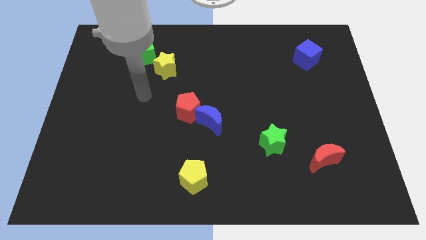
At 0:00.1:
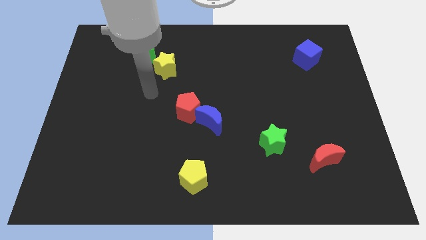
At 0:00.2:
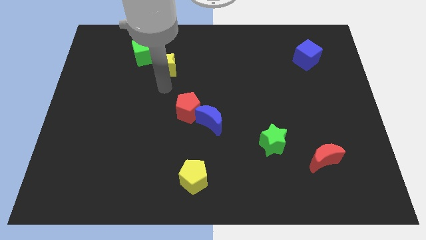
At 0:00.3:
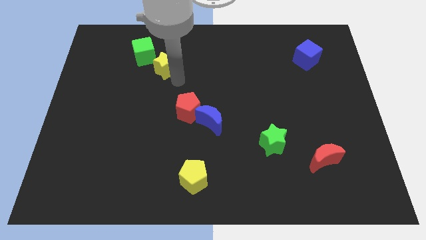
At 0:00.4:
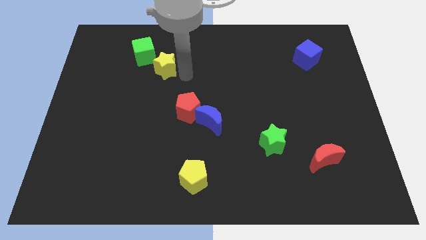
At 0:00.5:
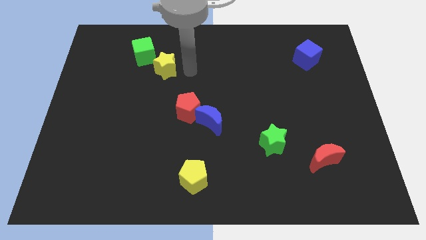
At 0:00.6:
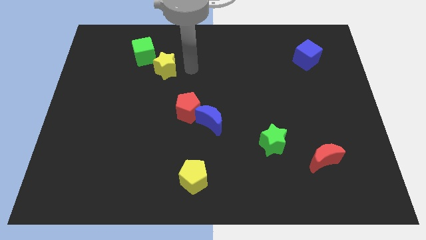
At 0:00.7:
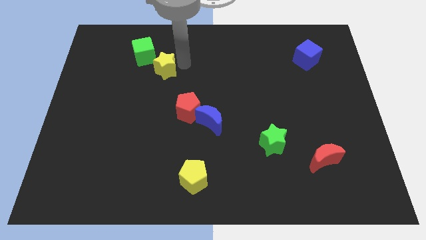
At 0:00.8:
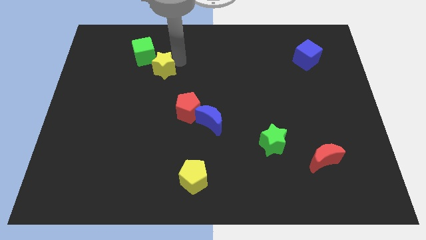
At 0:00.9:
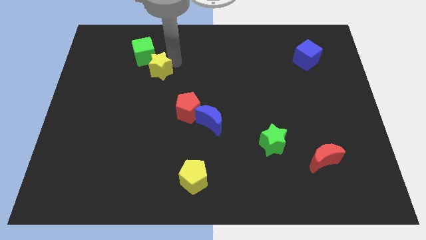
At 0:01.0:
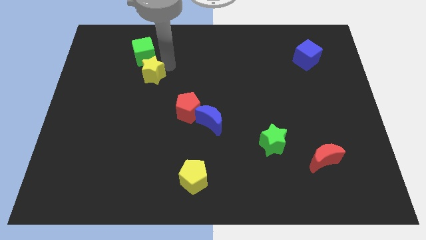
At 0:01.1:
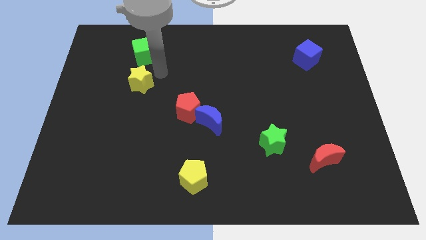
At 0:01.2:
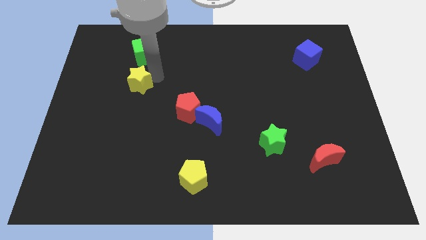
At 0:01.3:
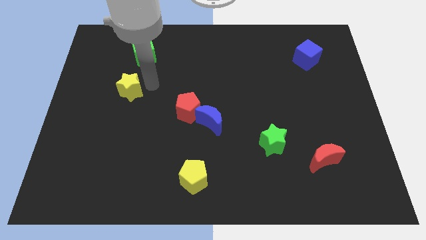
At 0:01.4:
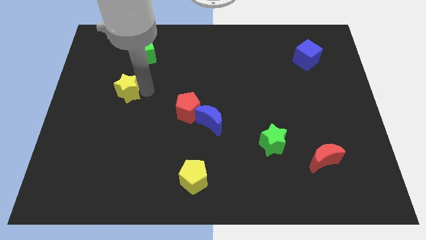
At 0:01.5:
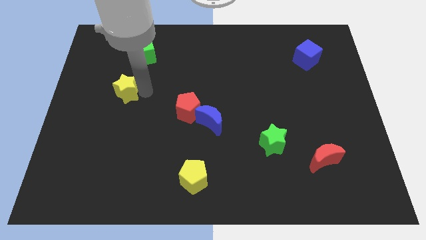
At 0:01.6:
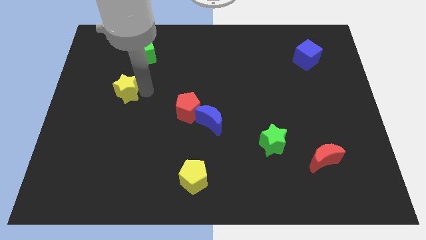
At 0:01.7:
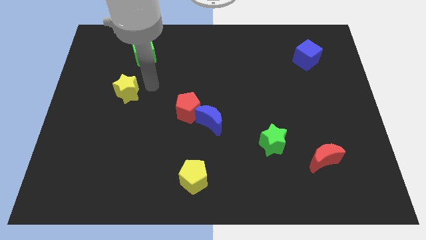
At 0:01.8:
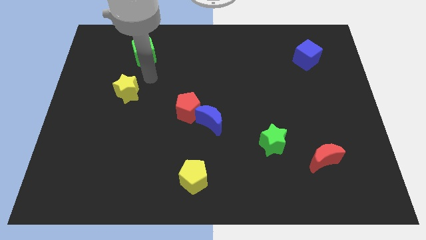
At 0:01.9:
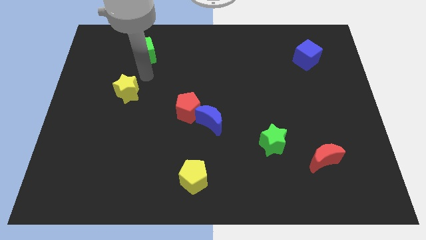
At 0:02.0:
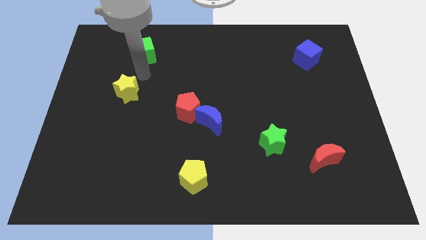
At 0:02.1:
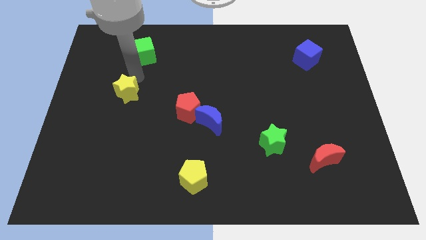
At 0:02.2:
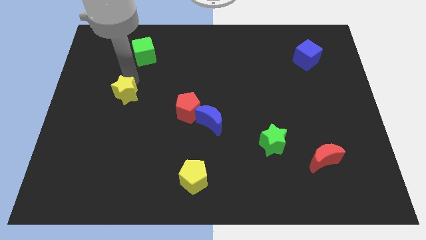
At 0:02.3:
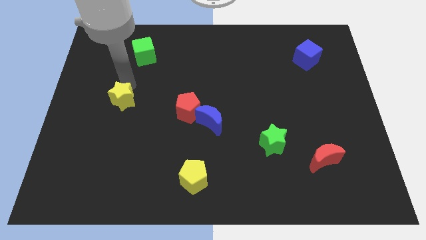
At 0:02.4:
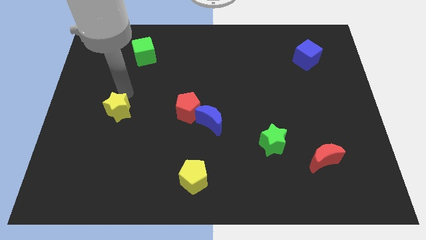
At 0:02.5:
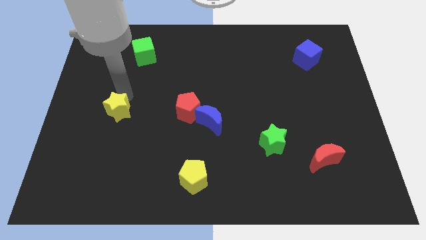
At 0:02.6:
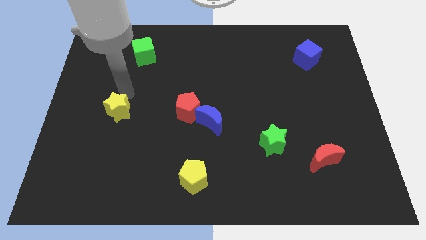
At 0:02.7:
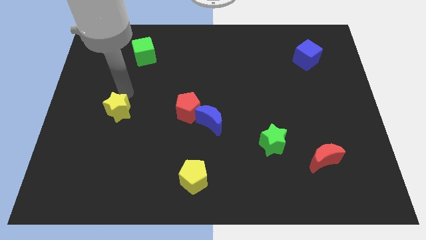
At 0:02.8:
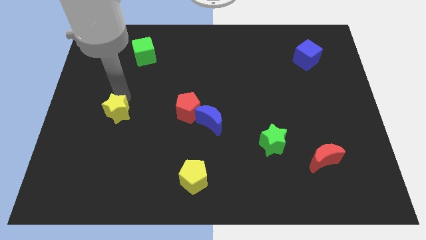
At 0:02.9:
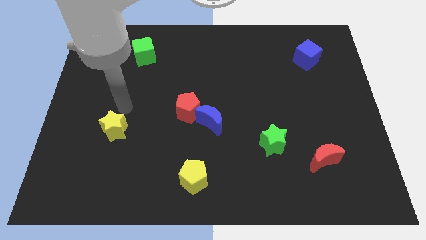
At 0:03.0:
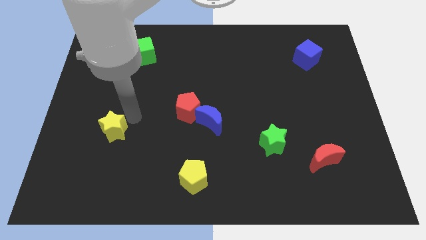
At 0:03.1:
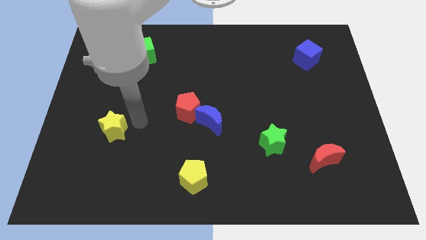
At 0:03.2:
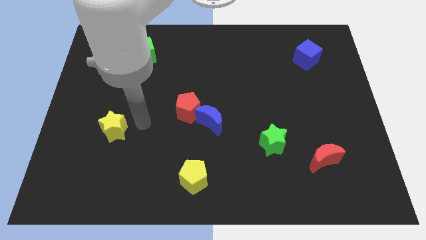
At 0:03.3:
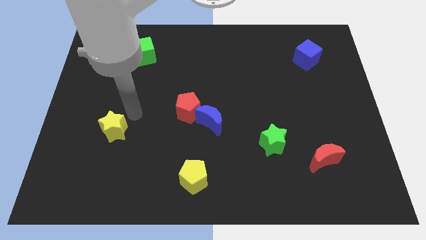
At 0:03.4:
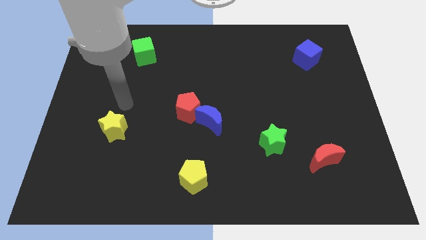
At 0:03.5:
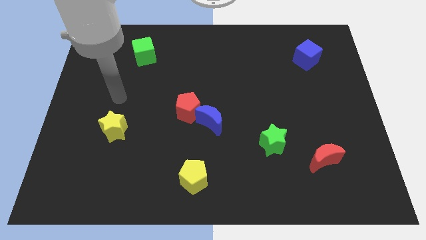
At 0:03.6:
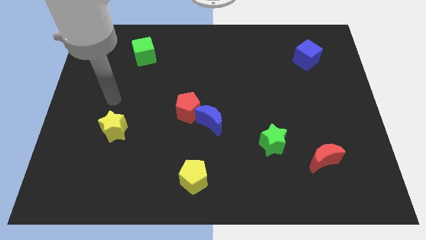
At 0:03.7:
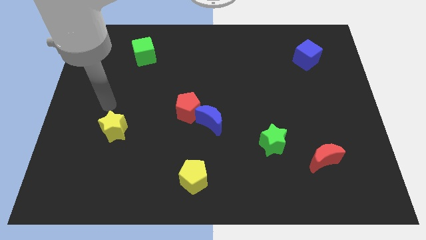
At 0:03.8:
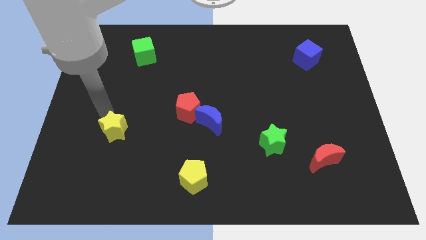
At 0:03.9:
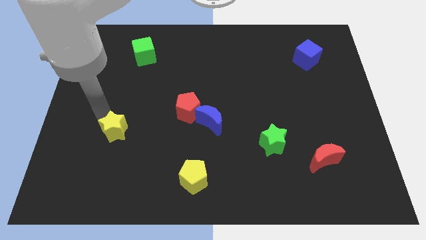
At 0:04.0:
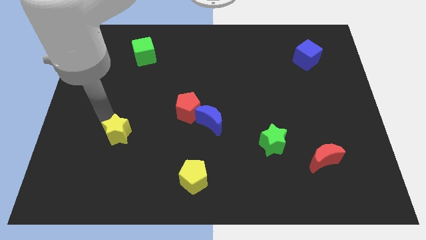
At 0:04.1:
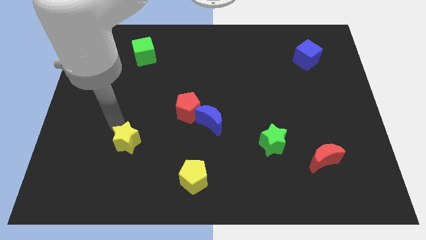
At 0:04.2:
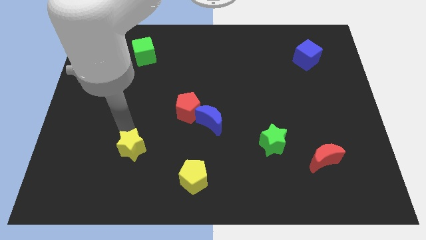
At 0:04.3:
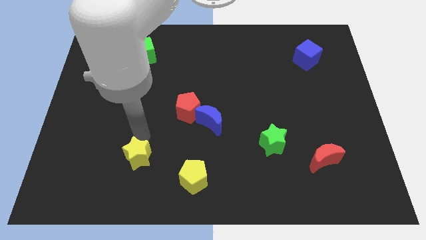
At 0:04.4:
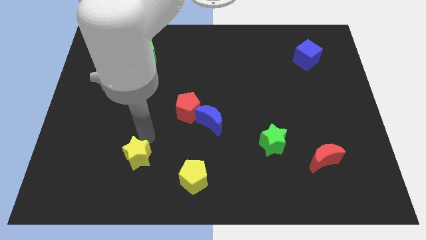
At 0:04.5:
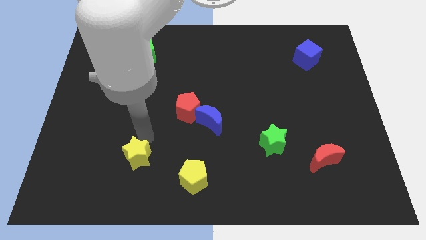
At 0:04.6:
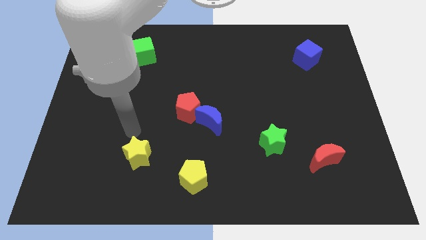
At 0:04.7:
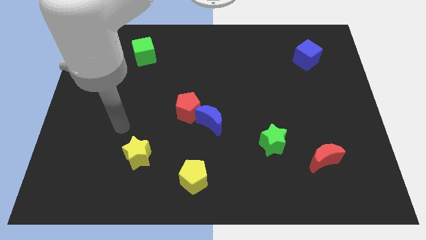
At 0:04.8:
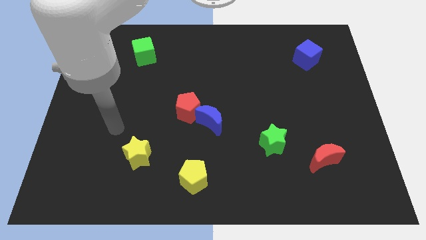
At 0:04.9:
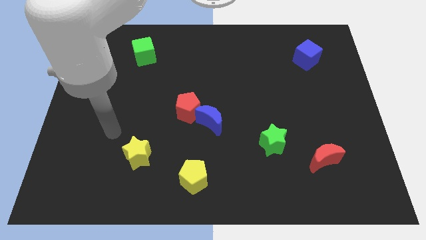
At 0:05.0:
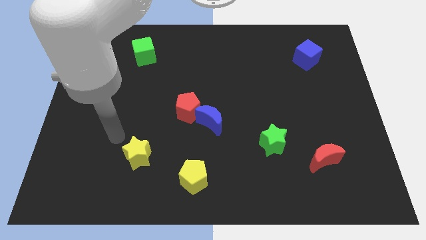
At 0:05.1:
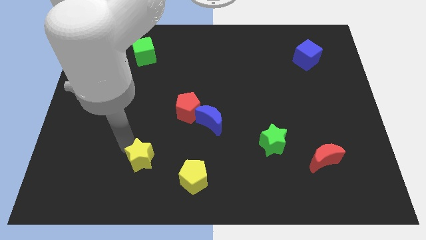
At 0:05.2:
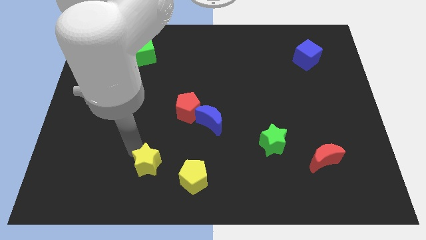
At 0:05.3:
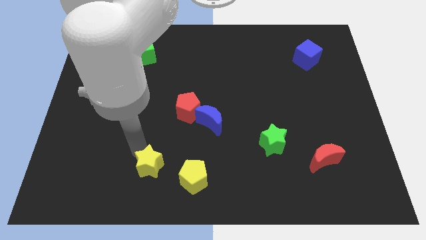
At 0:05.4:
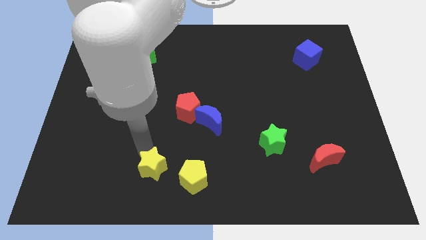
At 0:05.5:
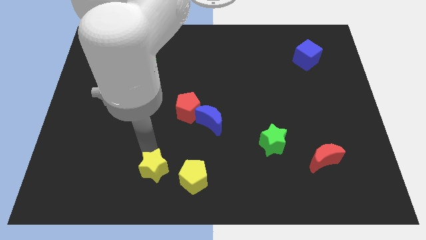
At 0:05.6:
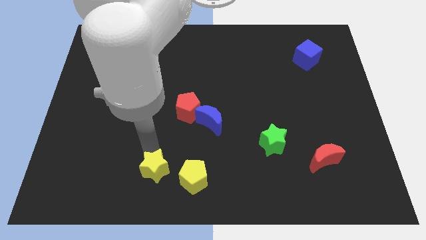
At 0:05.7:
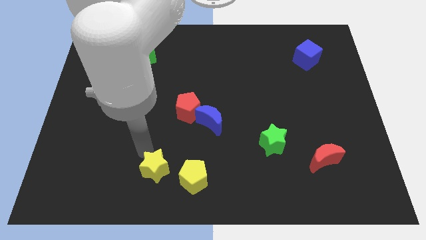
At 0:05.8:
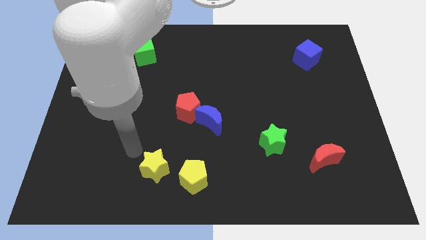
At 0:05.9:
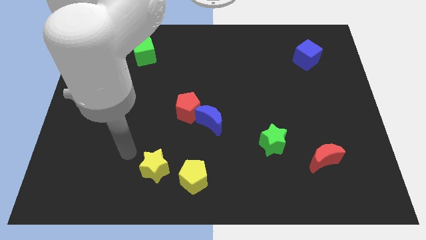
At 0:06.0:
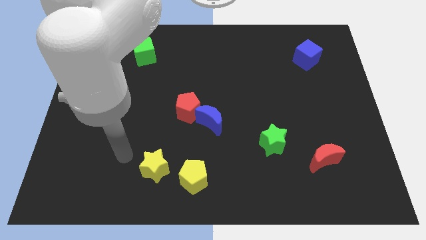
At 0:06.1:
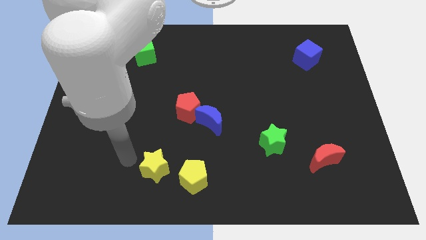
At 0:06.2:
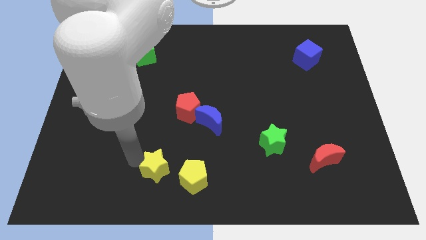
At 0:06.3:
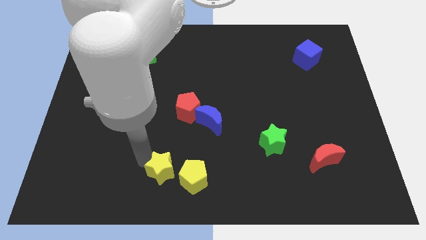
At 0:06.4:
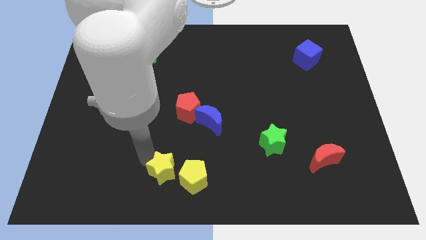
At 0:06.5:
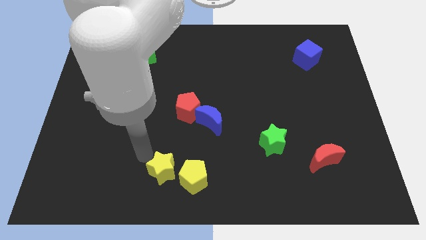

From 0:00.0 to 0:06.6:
push the yellow star to the left side of the yellow pentagon

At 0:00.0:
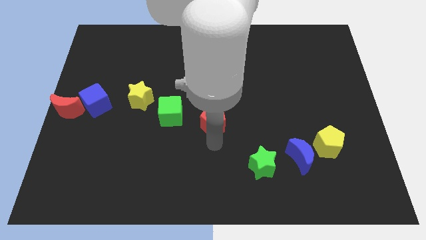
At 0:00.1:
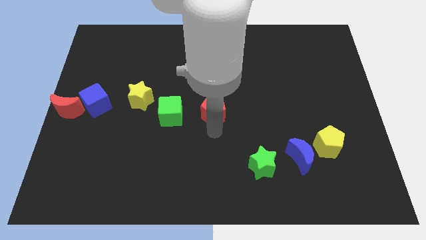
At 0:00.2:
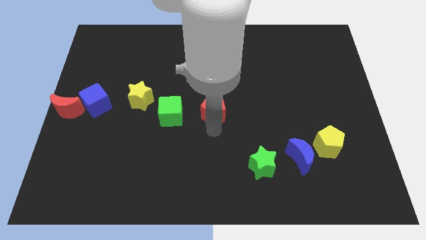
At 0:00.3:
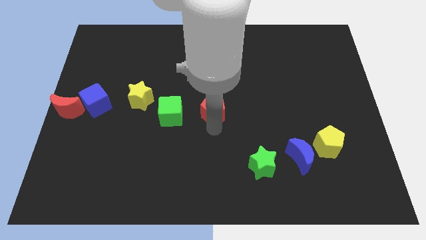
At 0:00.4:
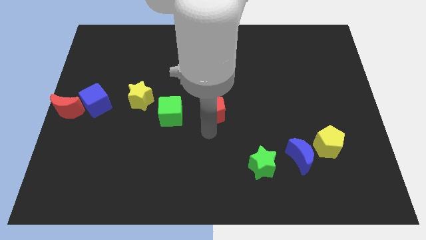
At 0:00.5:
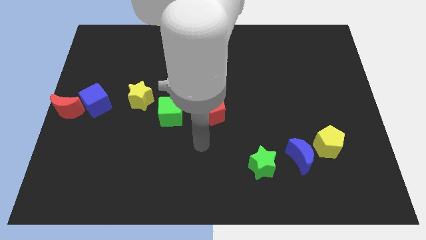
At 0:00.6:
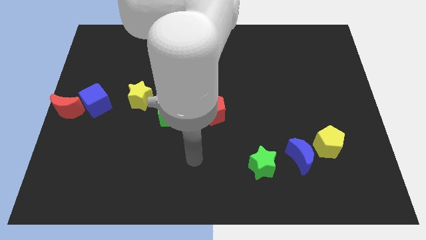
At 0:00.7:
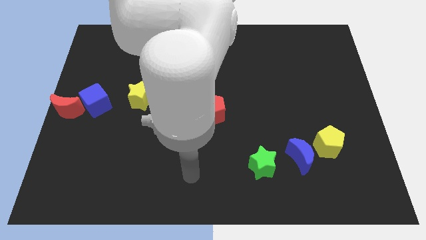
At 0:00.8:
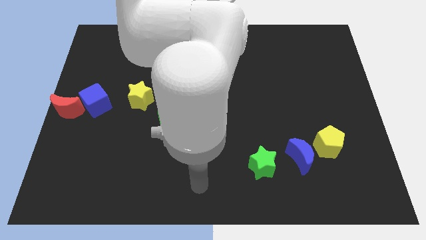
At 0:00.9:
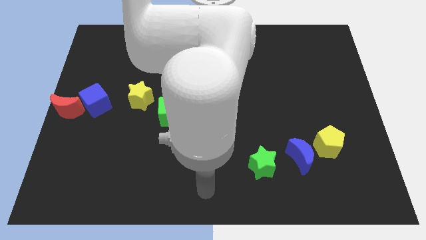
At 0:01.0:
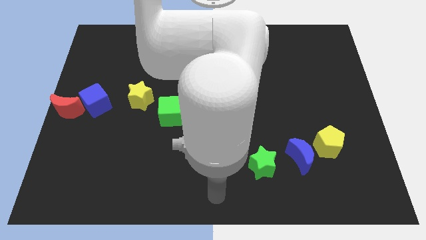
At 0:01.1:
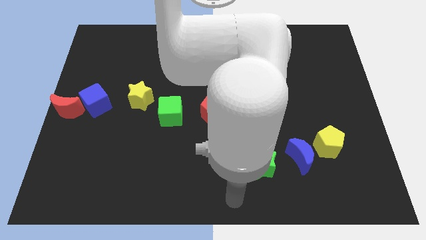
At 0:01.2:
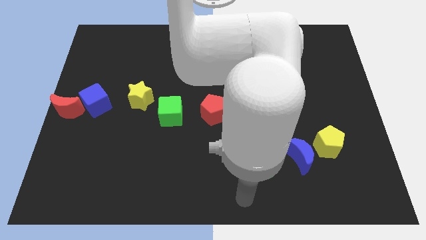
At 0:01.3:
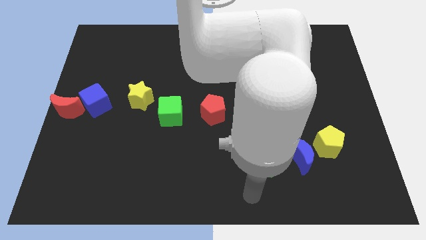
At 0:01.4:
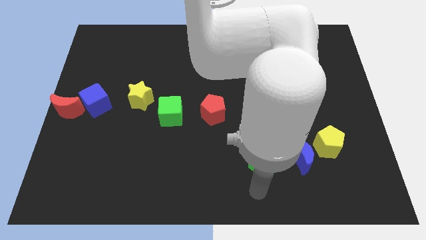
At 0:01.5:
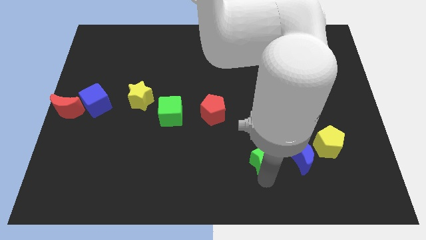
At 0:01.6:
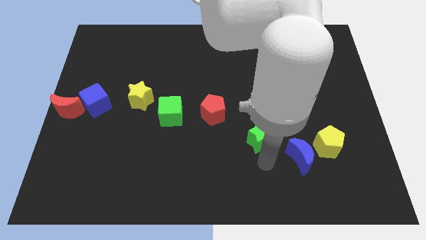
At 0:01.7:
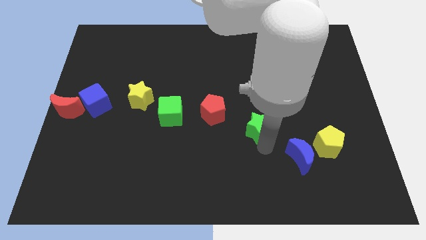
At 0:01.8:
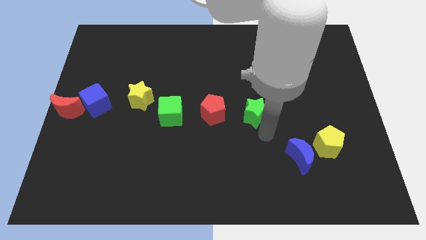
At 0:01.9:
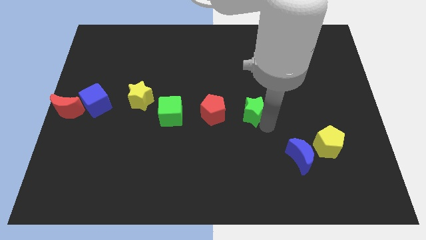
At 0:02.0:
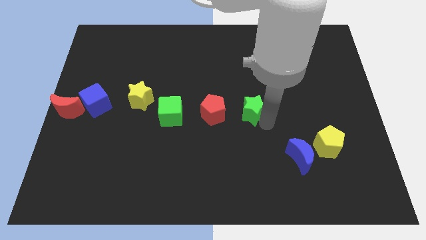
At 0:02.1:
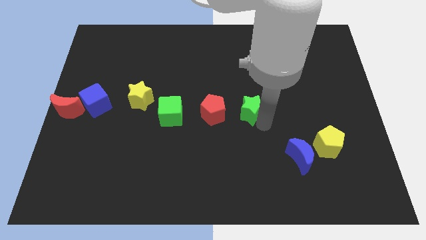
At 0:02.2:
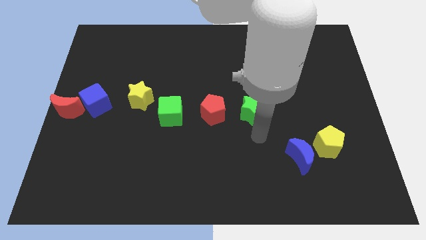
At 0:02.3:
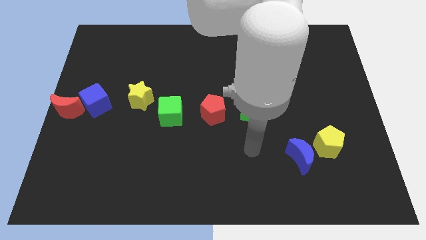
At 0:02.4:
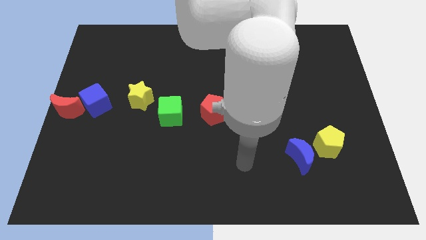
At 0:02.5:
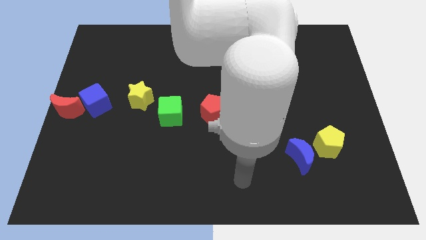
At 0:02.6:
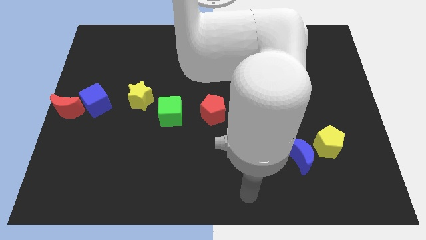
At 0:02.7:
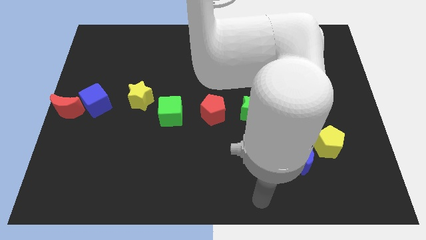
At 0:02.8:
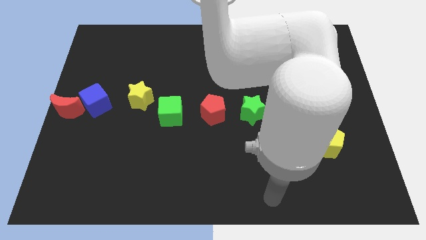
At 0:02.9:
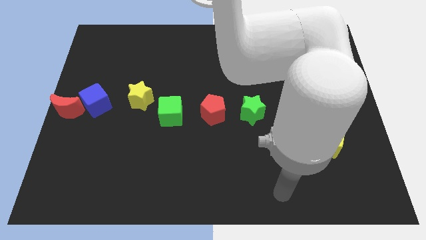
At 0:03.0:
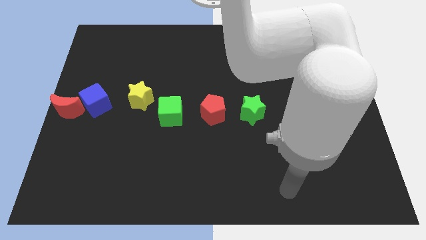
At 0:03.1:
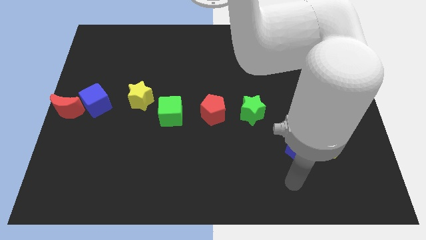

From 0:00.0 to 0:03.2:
place the green star beside the red pentagon to form a line
